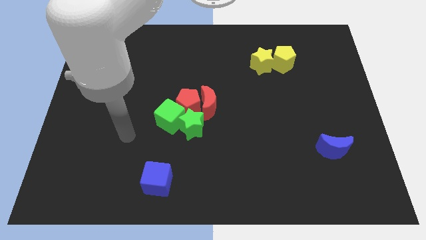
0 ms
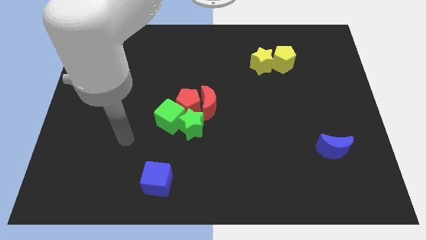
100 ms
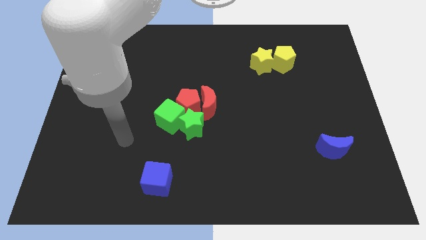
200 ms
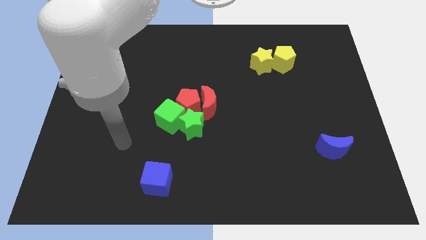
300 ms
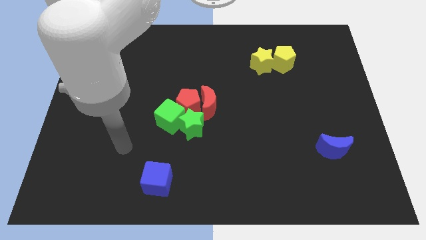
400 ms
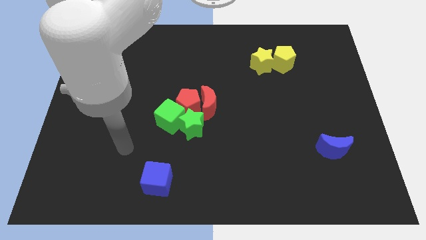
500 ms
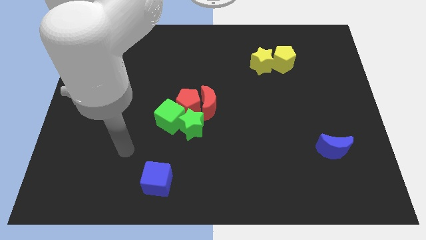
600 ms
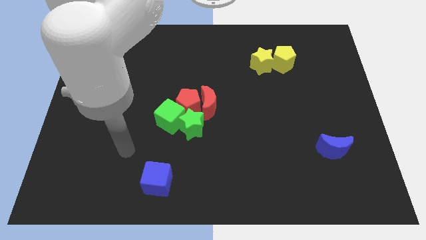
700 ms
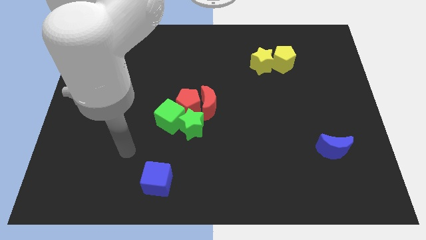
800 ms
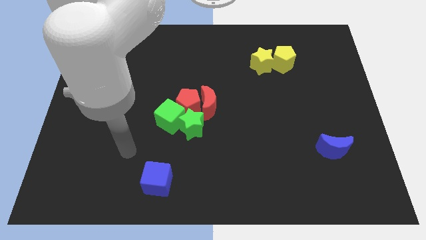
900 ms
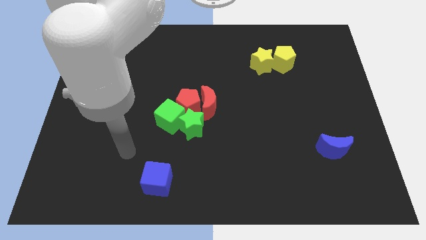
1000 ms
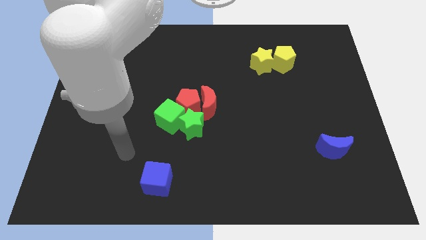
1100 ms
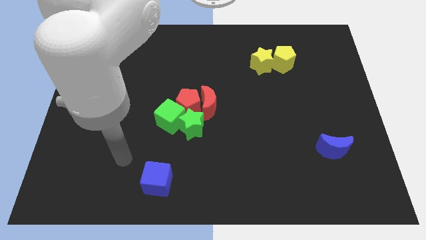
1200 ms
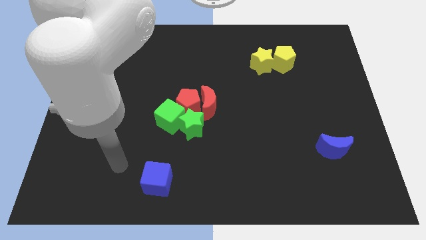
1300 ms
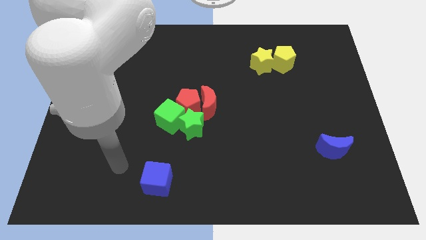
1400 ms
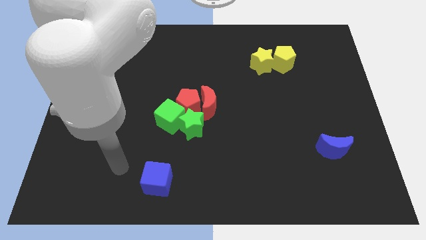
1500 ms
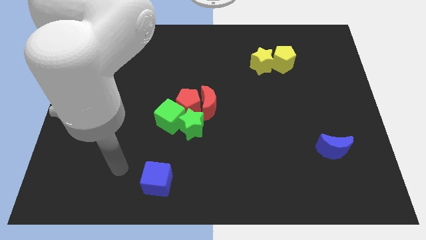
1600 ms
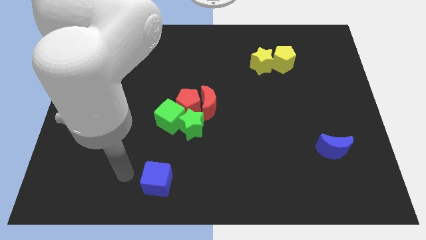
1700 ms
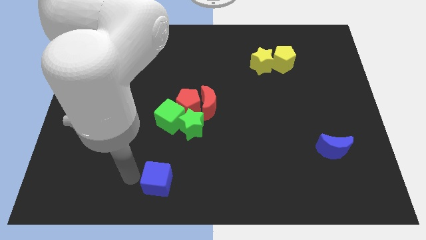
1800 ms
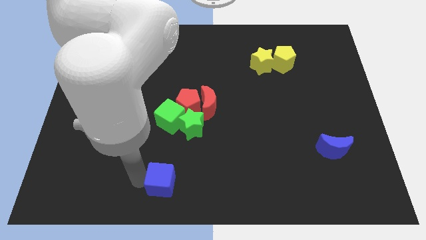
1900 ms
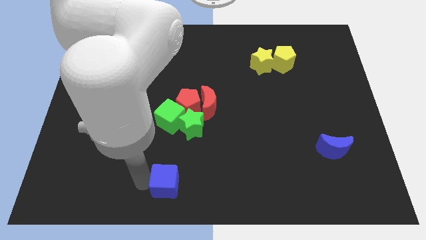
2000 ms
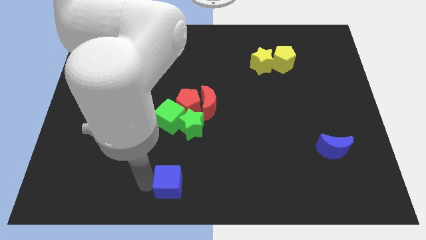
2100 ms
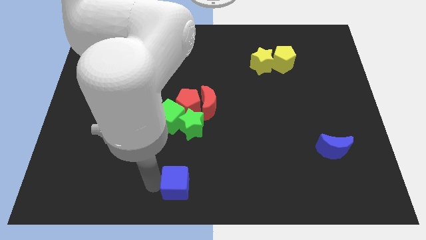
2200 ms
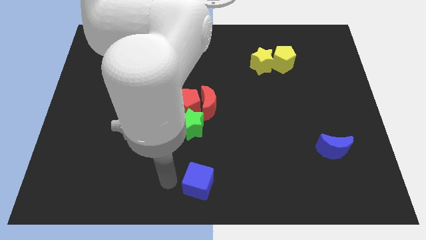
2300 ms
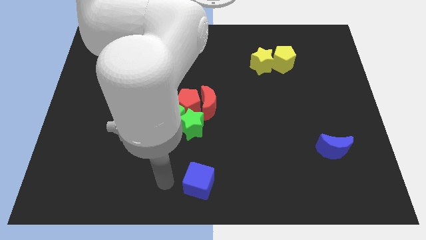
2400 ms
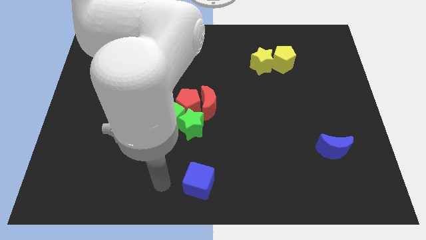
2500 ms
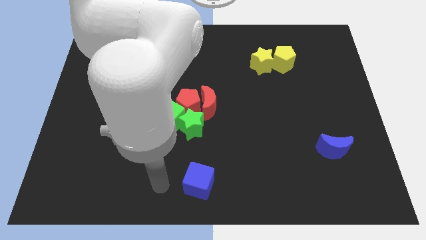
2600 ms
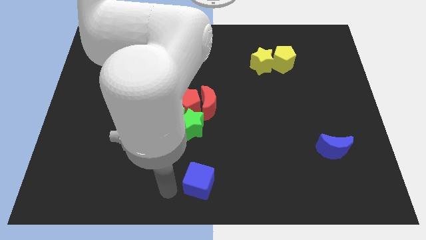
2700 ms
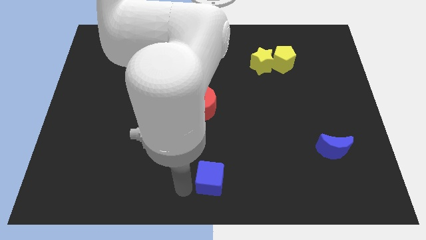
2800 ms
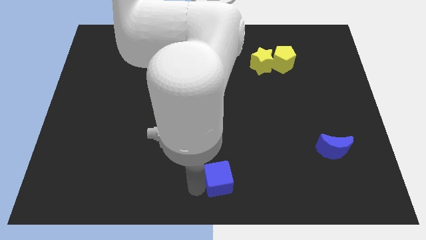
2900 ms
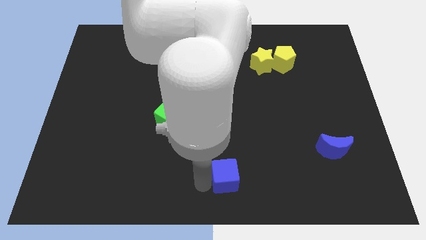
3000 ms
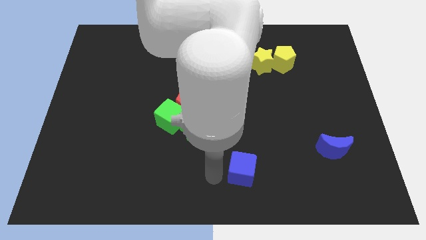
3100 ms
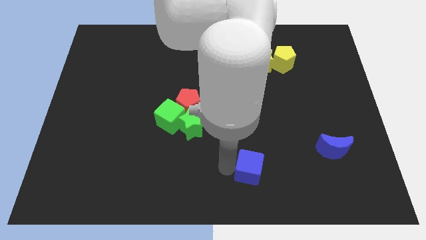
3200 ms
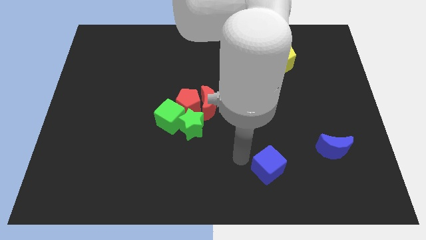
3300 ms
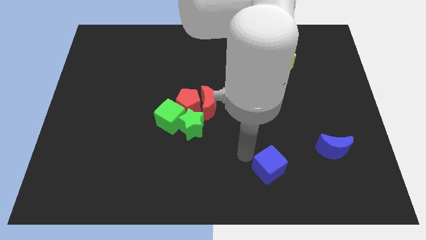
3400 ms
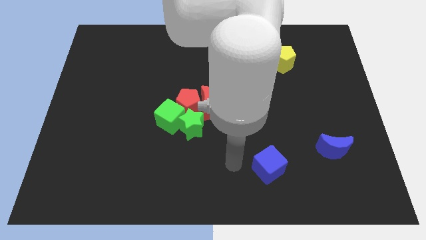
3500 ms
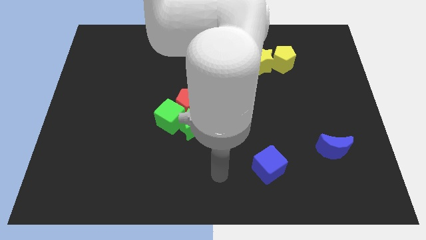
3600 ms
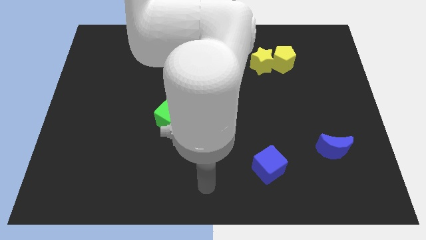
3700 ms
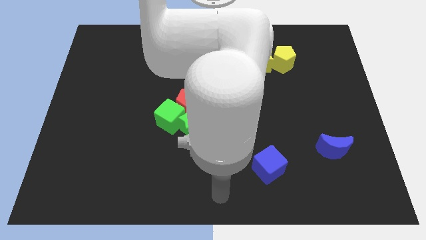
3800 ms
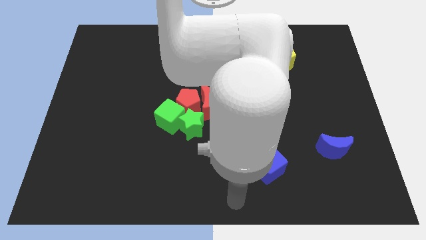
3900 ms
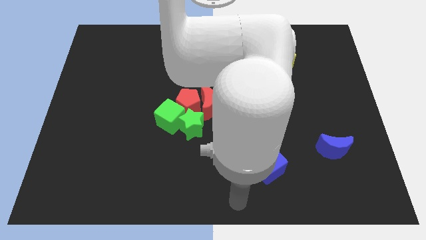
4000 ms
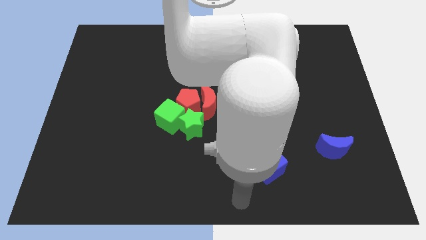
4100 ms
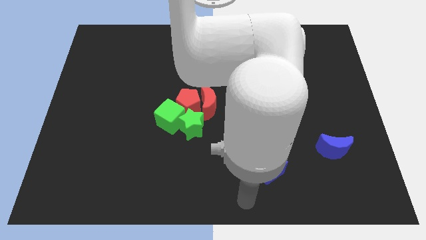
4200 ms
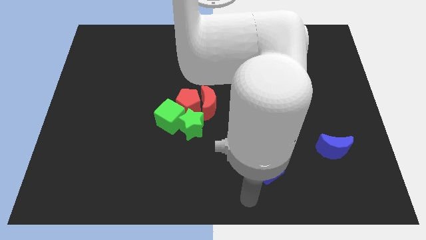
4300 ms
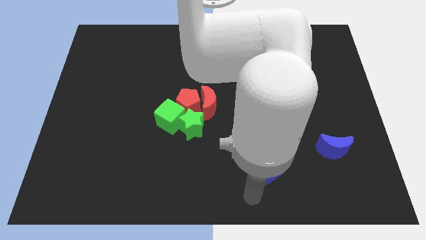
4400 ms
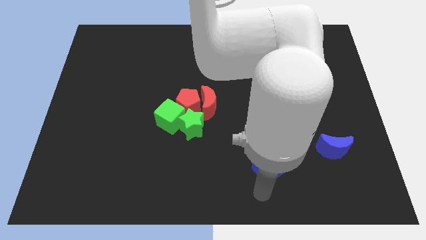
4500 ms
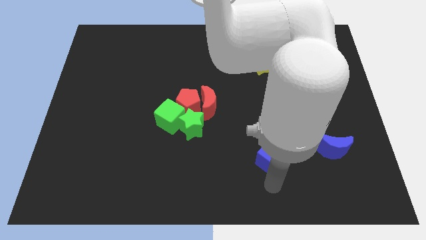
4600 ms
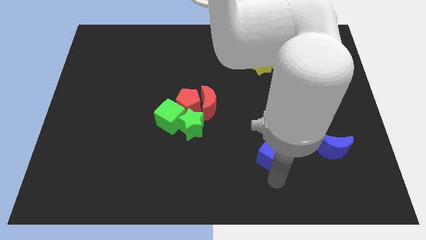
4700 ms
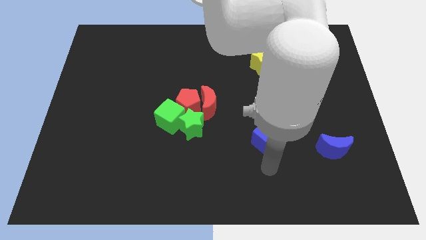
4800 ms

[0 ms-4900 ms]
push the blue cube to the horizontal left of the blue moon

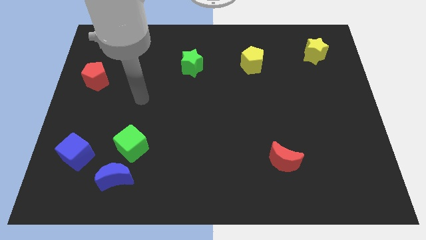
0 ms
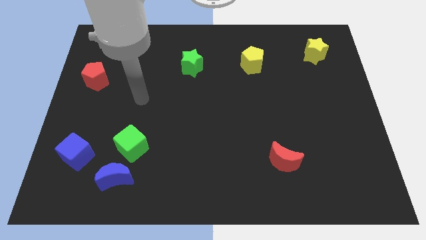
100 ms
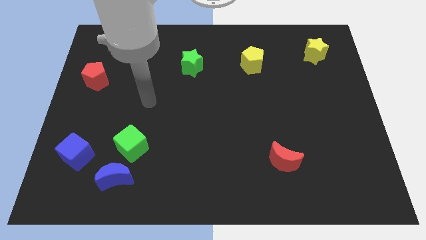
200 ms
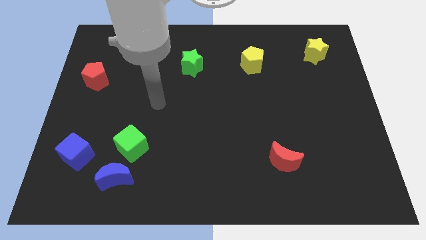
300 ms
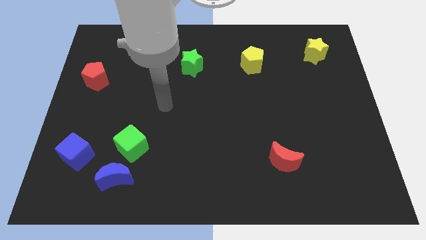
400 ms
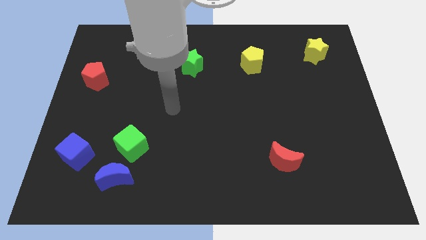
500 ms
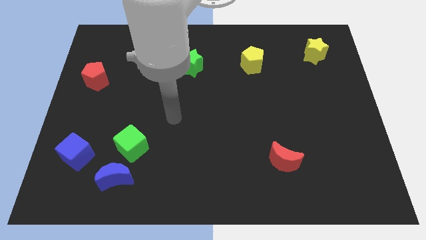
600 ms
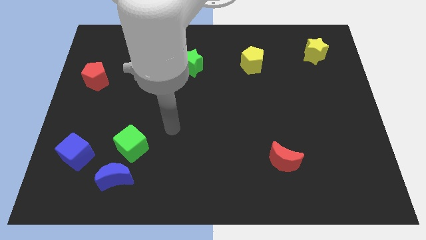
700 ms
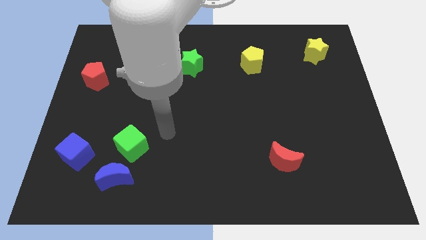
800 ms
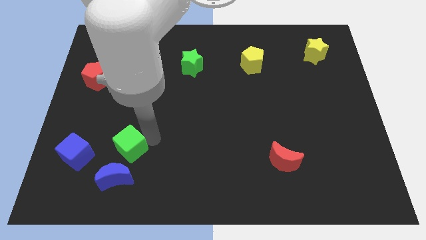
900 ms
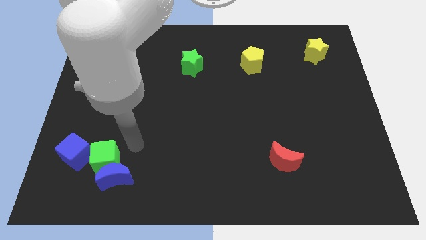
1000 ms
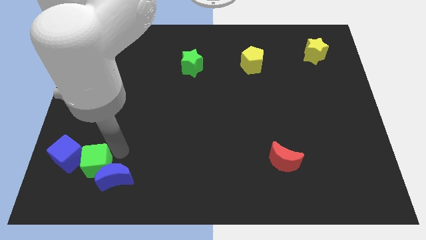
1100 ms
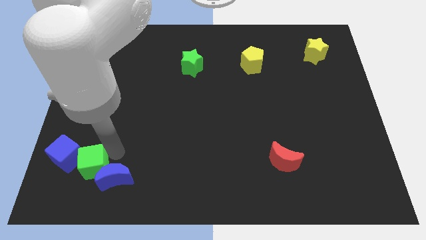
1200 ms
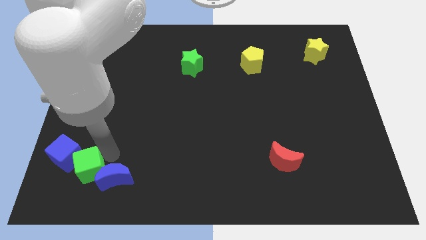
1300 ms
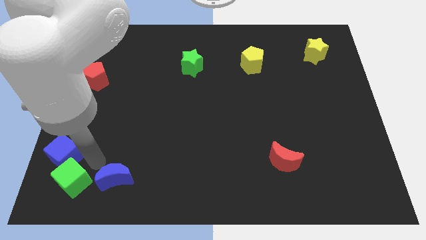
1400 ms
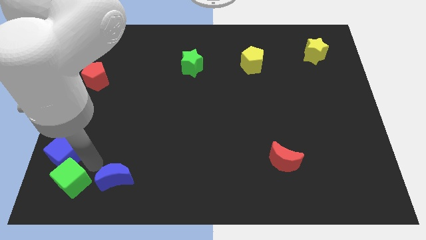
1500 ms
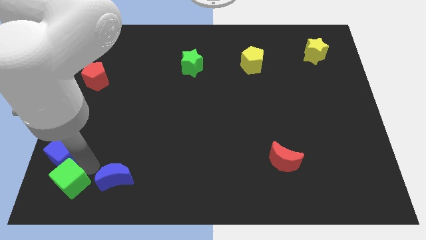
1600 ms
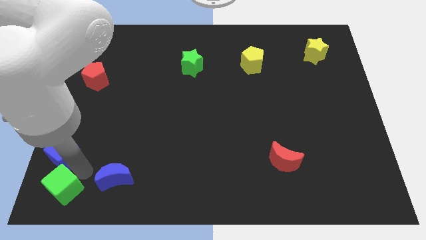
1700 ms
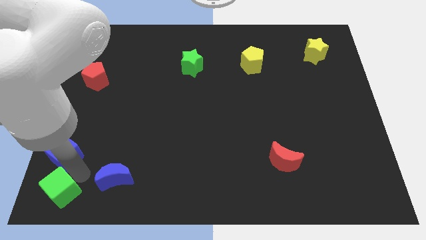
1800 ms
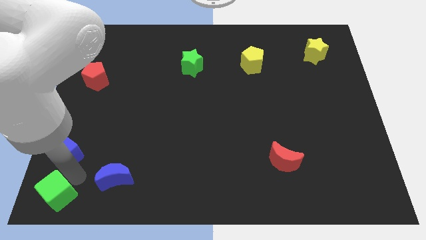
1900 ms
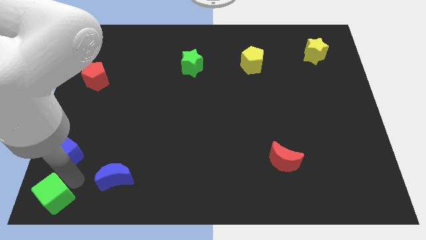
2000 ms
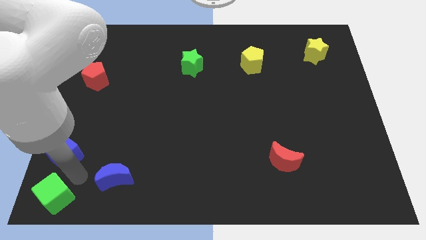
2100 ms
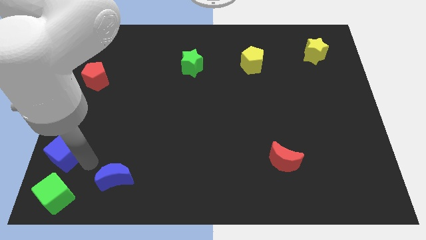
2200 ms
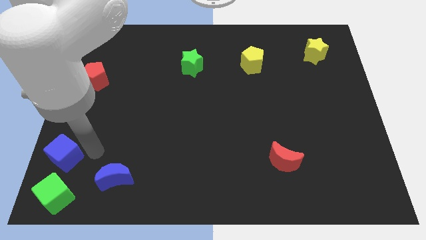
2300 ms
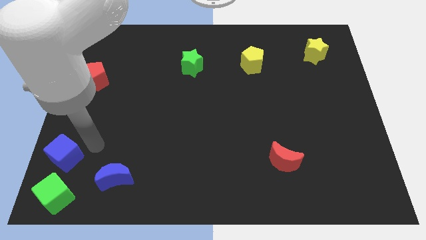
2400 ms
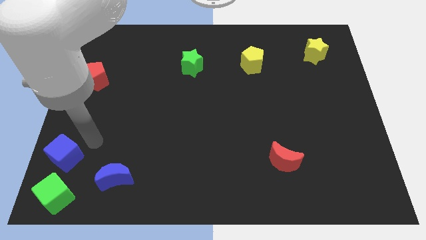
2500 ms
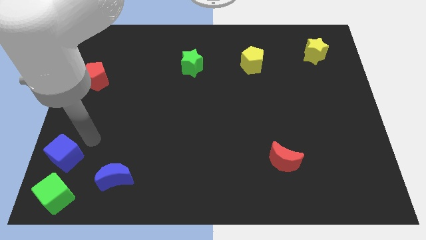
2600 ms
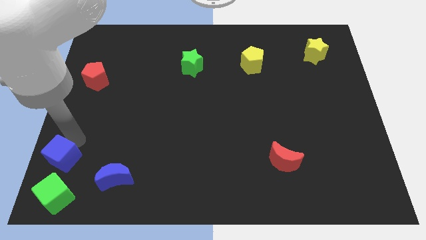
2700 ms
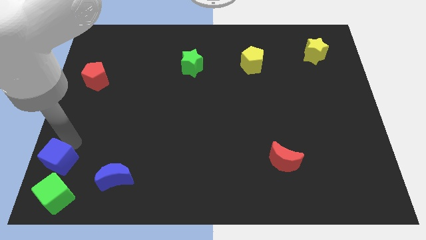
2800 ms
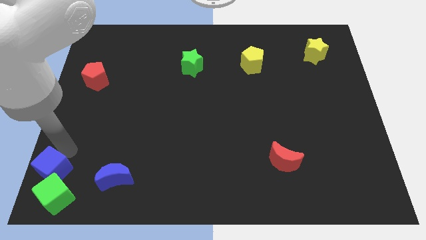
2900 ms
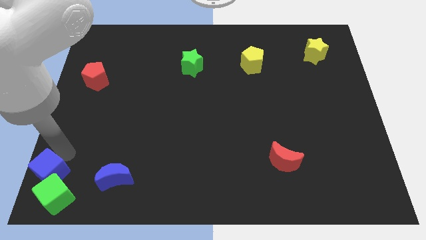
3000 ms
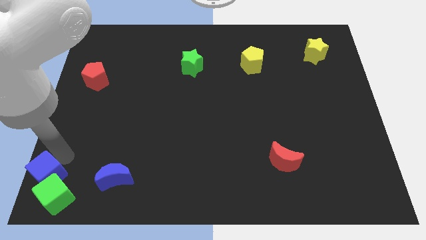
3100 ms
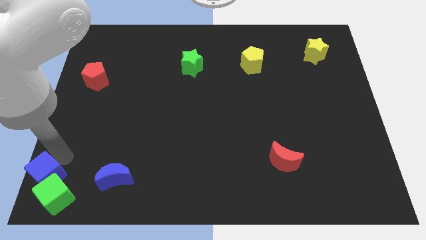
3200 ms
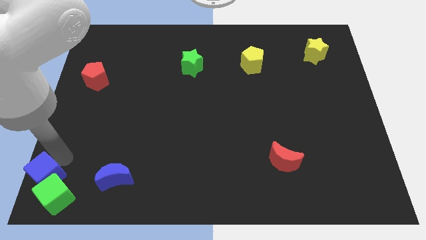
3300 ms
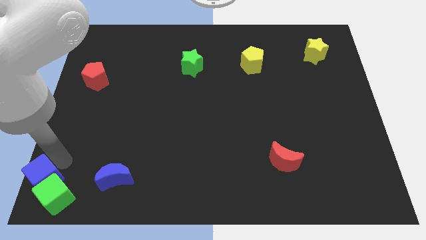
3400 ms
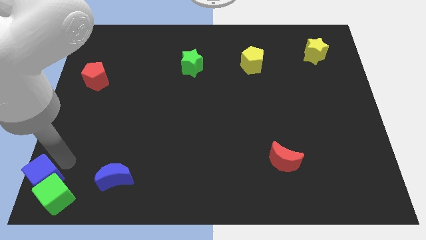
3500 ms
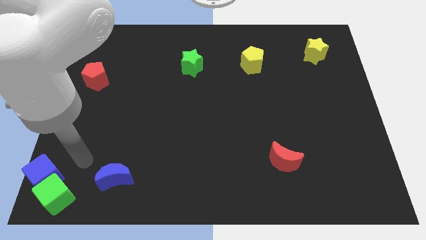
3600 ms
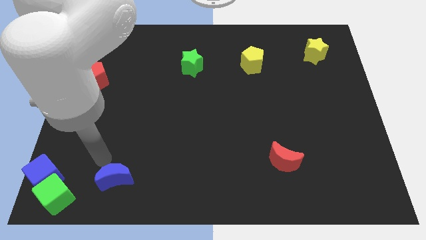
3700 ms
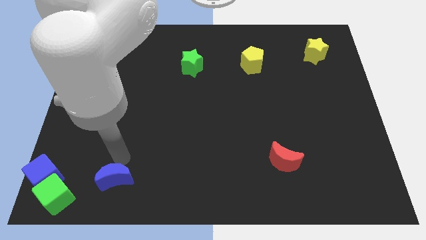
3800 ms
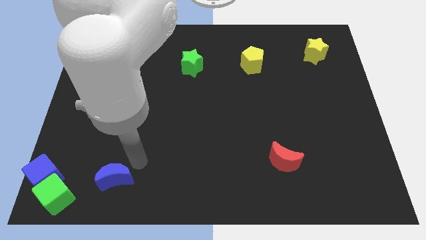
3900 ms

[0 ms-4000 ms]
align blue cube with green cube
